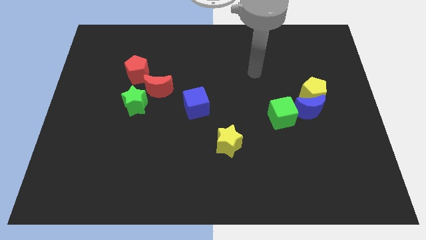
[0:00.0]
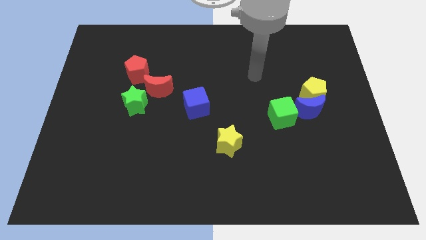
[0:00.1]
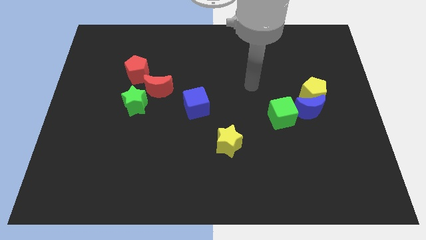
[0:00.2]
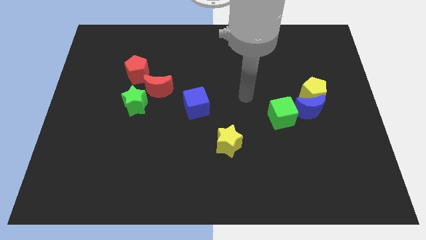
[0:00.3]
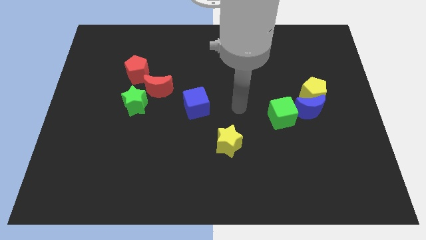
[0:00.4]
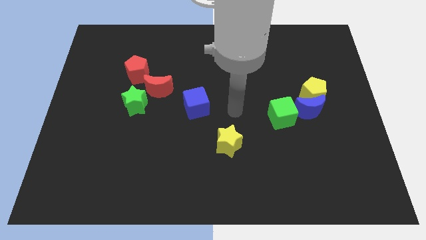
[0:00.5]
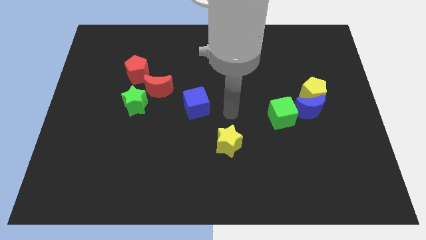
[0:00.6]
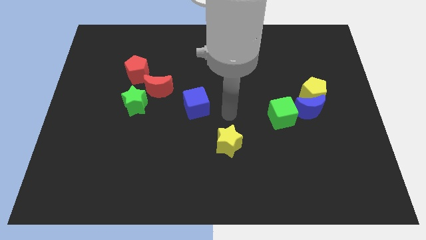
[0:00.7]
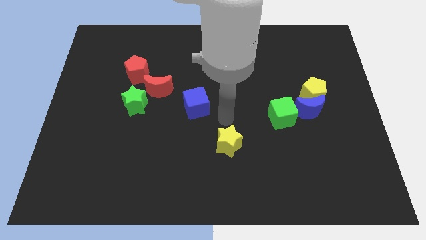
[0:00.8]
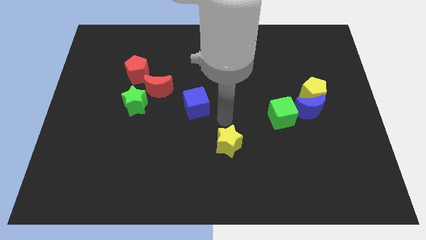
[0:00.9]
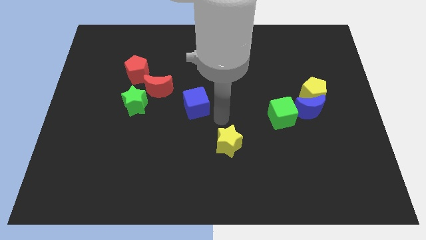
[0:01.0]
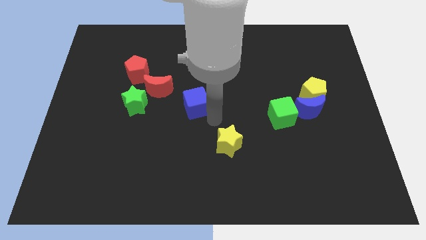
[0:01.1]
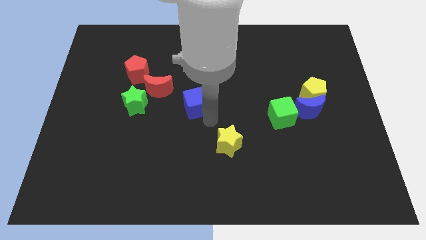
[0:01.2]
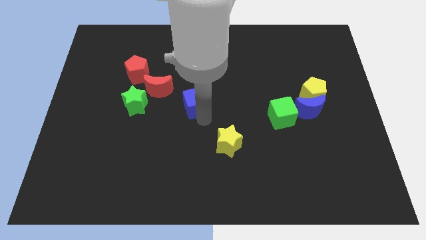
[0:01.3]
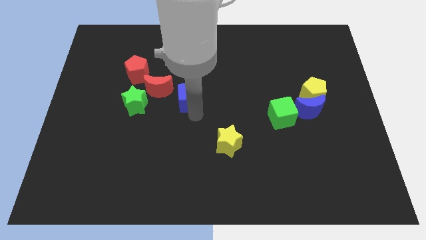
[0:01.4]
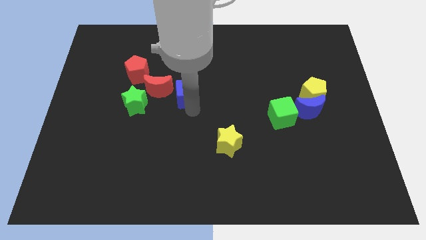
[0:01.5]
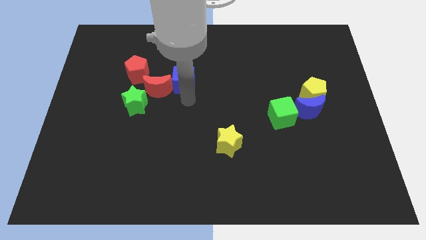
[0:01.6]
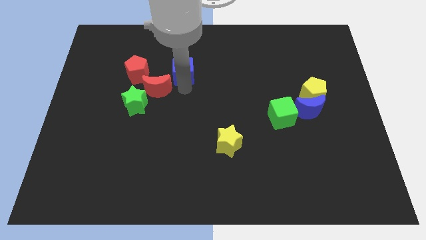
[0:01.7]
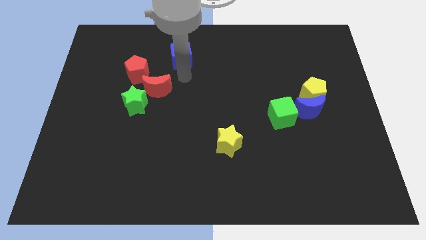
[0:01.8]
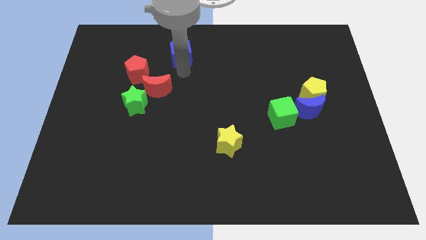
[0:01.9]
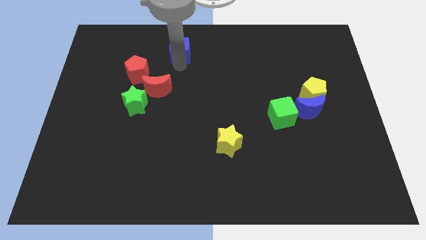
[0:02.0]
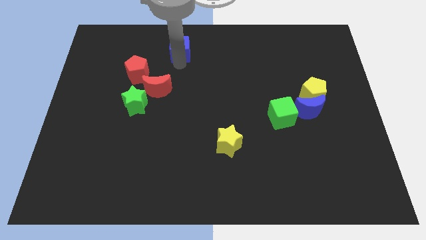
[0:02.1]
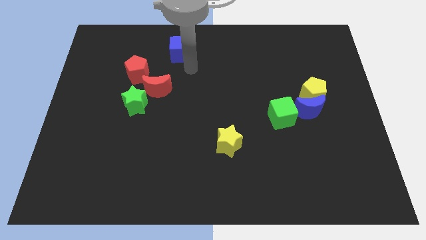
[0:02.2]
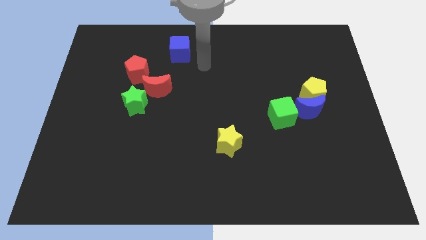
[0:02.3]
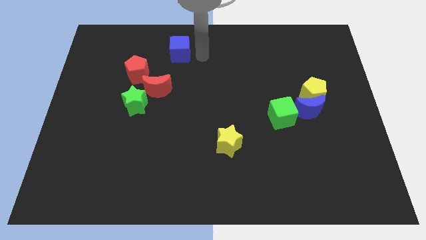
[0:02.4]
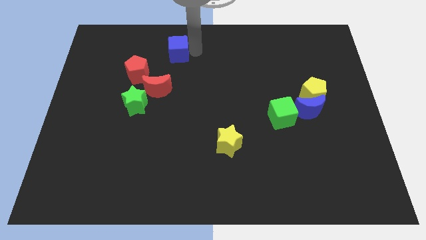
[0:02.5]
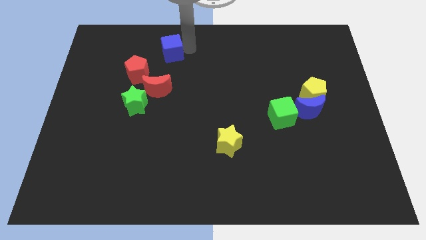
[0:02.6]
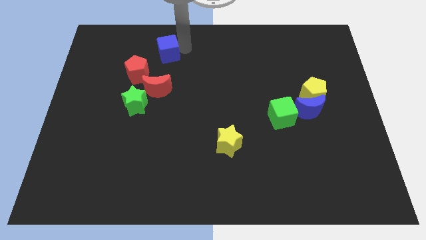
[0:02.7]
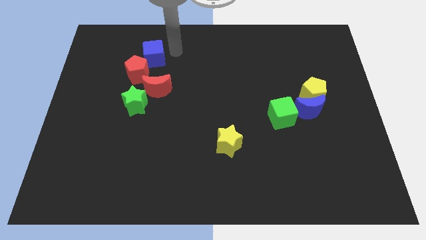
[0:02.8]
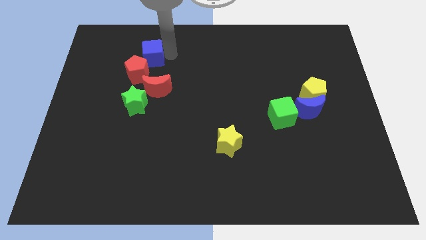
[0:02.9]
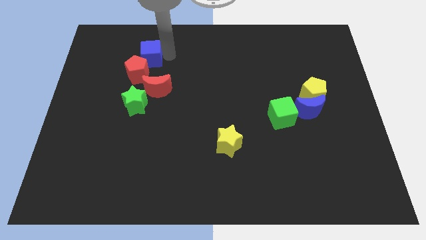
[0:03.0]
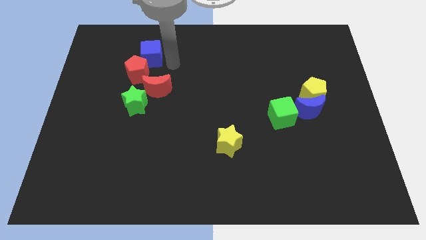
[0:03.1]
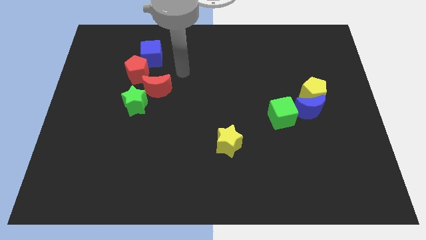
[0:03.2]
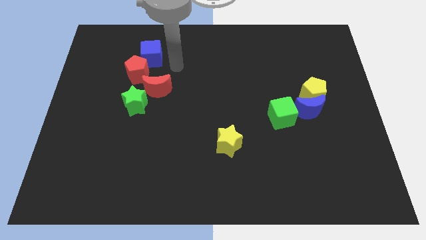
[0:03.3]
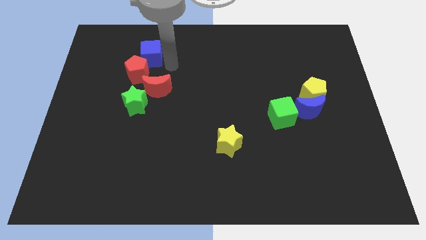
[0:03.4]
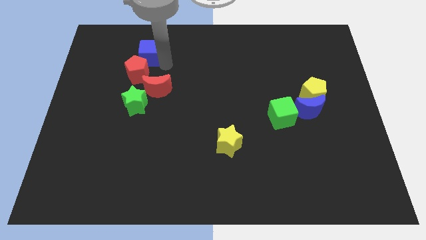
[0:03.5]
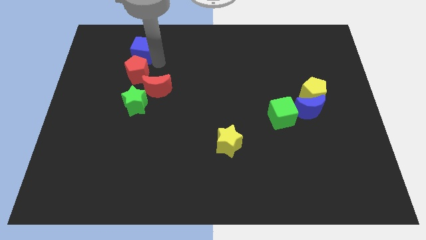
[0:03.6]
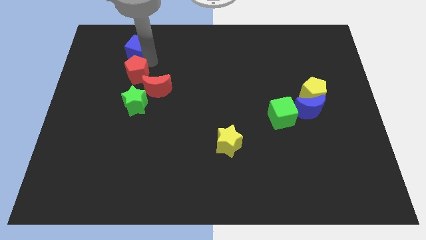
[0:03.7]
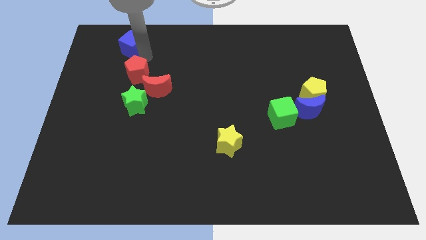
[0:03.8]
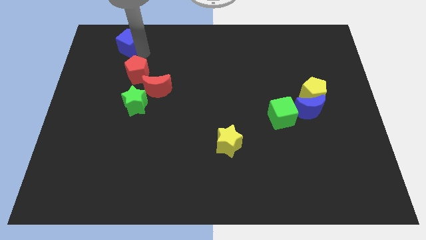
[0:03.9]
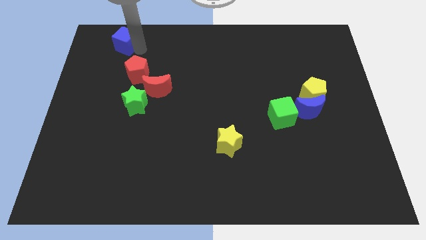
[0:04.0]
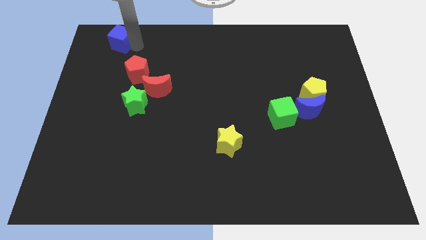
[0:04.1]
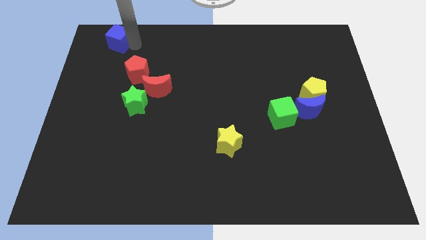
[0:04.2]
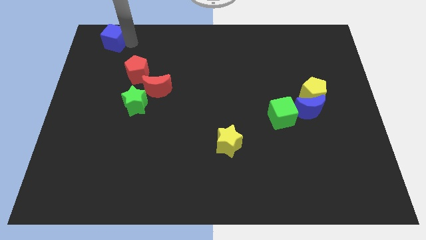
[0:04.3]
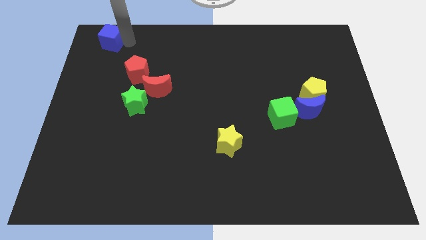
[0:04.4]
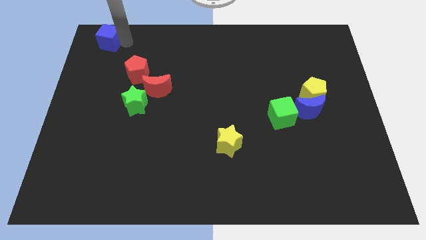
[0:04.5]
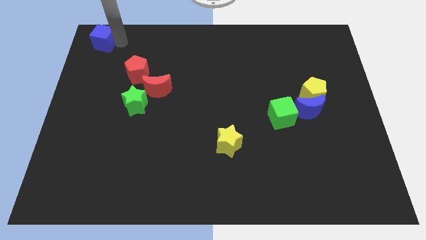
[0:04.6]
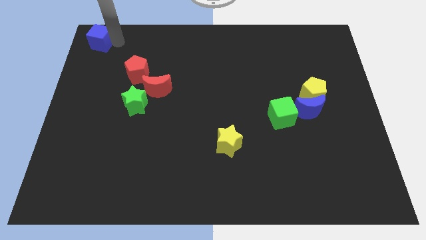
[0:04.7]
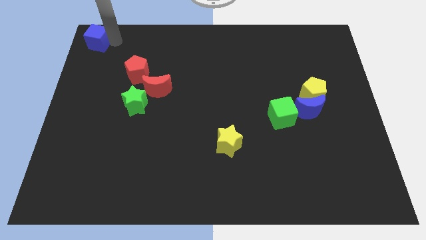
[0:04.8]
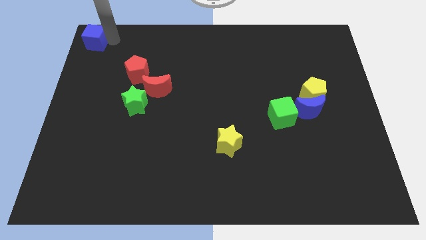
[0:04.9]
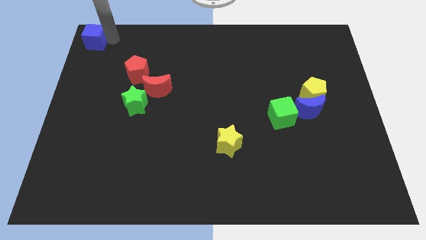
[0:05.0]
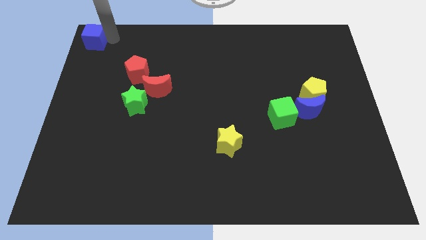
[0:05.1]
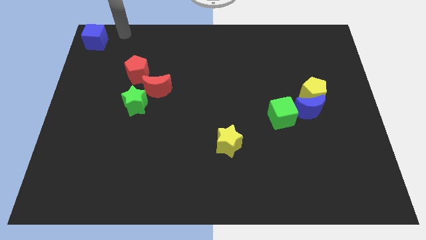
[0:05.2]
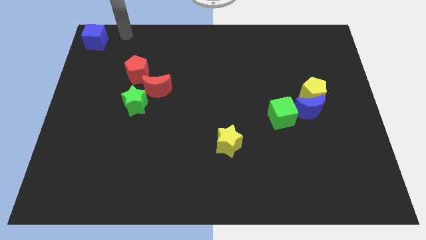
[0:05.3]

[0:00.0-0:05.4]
push the blue cube at the left top

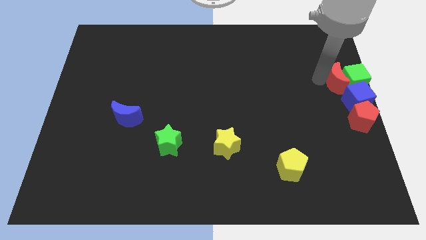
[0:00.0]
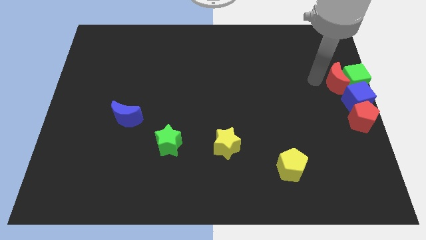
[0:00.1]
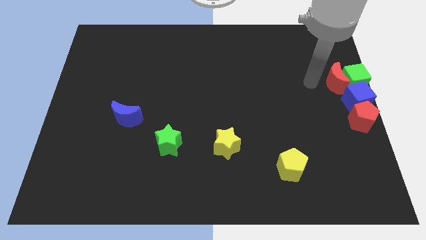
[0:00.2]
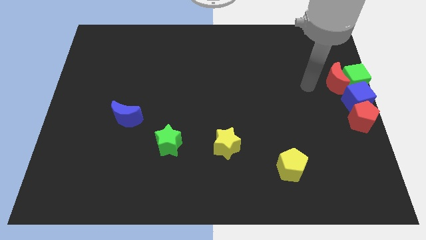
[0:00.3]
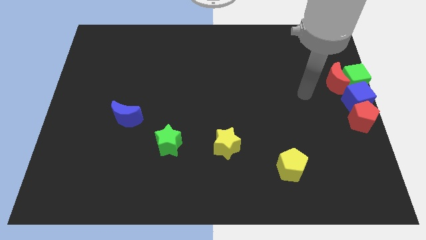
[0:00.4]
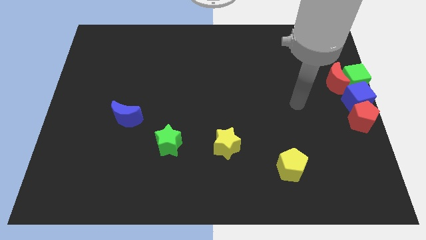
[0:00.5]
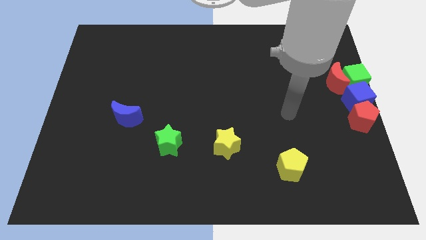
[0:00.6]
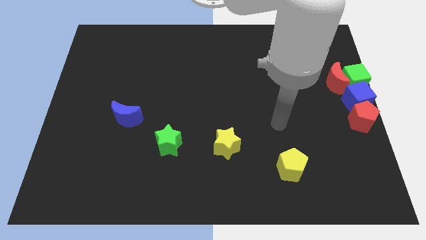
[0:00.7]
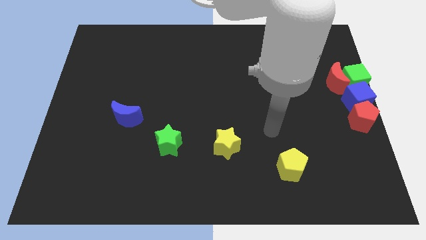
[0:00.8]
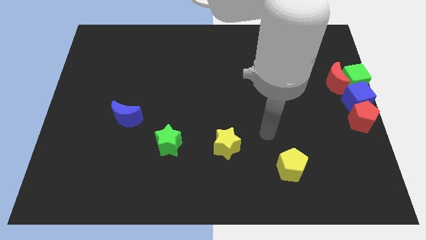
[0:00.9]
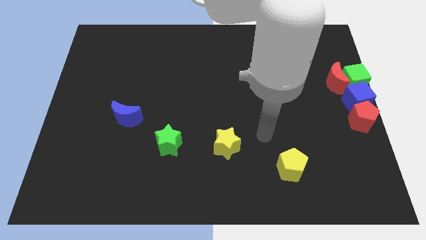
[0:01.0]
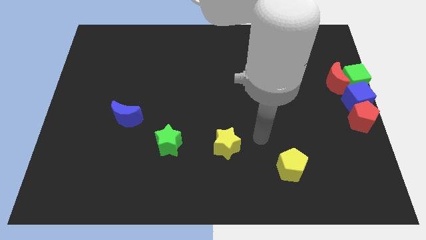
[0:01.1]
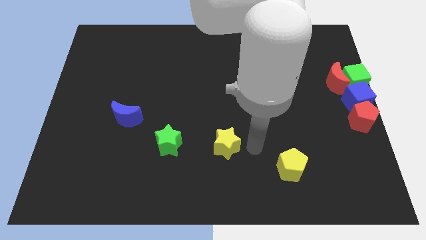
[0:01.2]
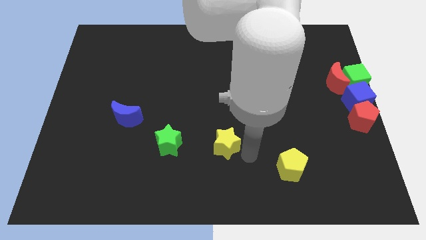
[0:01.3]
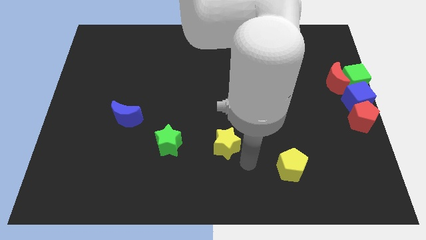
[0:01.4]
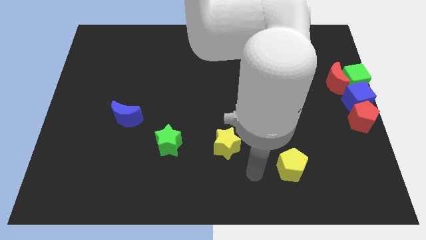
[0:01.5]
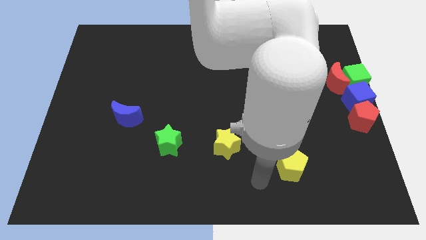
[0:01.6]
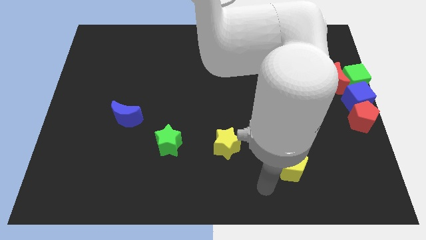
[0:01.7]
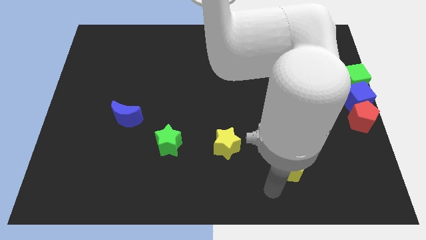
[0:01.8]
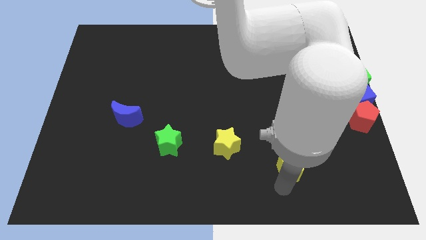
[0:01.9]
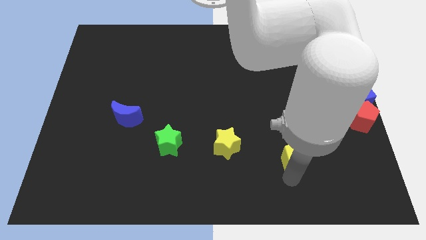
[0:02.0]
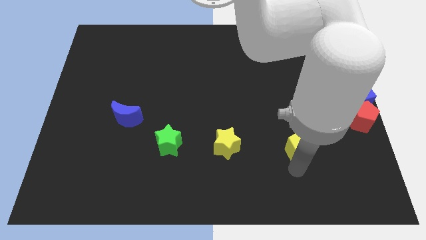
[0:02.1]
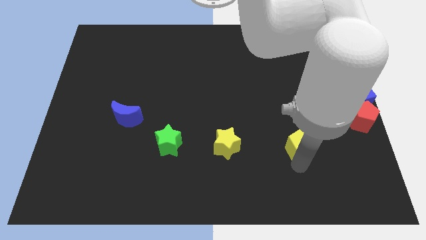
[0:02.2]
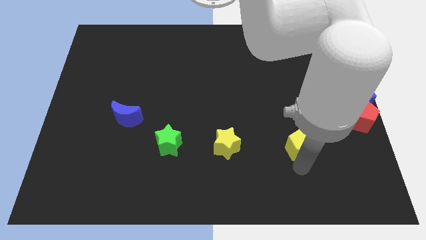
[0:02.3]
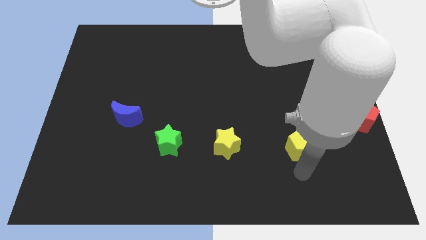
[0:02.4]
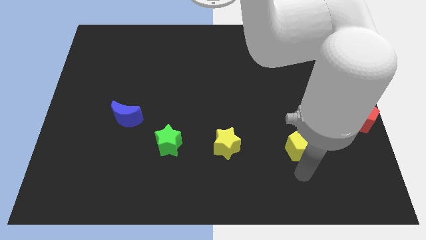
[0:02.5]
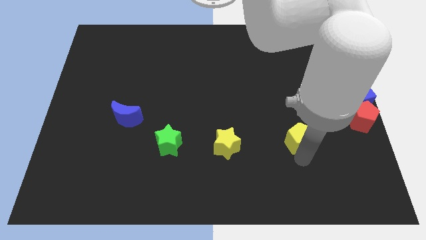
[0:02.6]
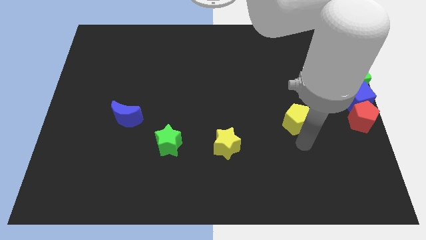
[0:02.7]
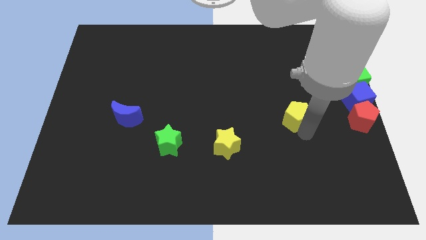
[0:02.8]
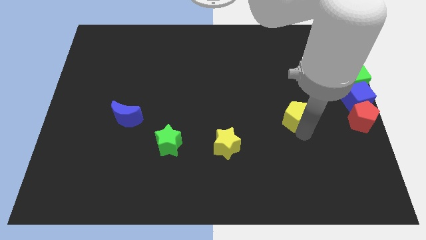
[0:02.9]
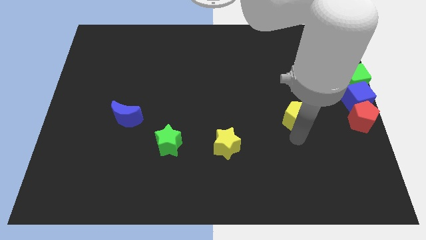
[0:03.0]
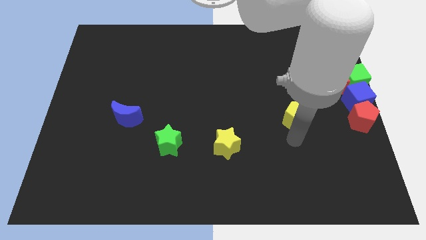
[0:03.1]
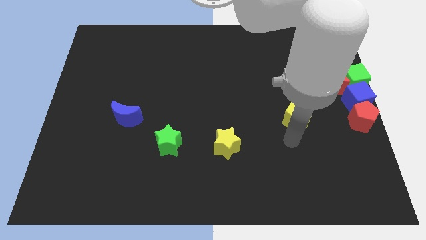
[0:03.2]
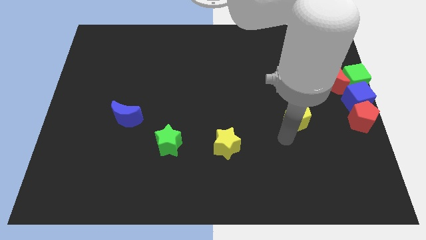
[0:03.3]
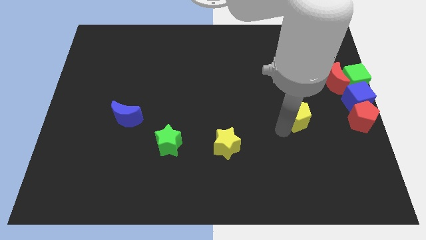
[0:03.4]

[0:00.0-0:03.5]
move the yellow pentagon diagonal to the yellow star

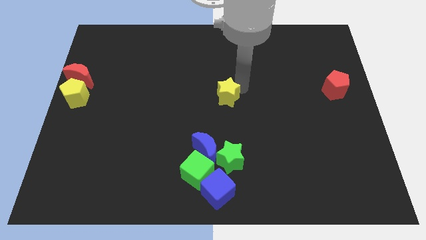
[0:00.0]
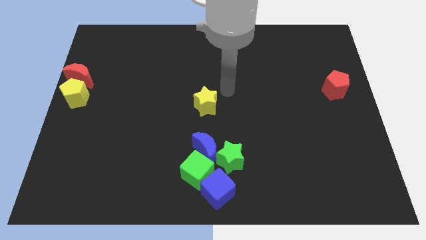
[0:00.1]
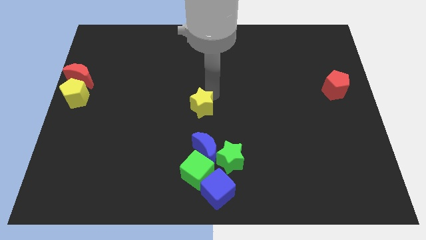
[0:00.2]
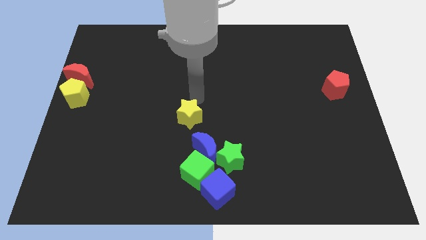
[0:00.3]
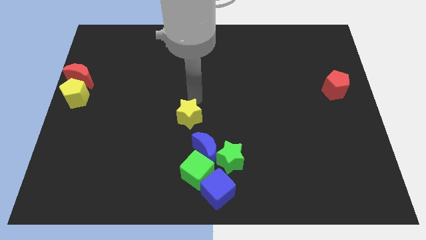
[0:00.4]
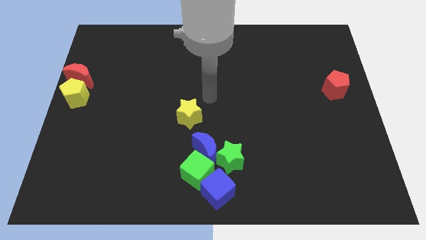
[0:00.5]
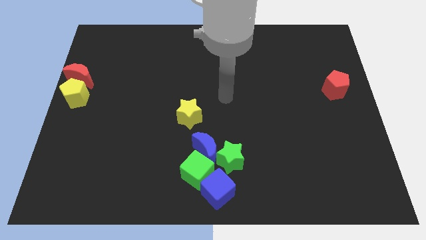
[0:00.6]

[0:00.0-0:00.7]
push the yellow star above to the left of blue crescent
